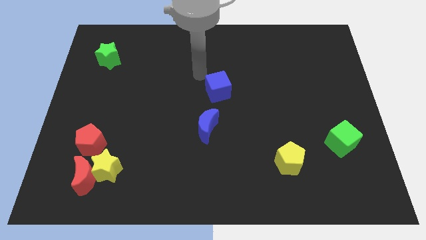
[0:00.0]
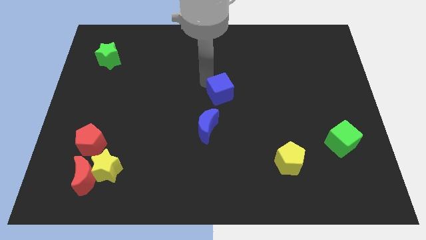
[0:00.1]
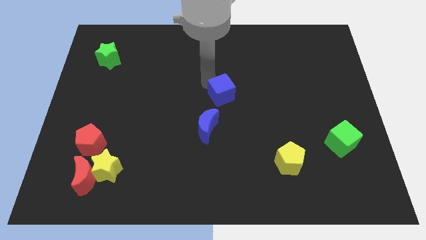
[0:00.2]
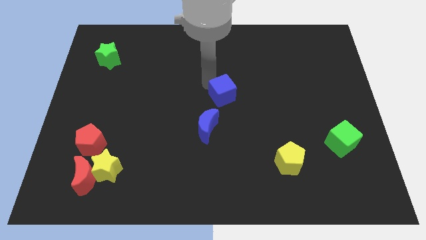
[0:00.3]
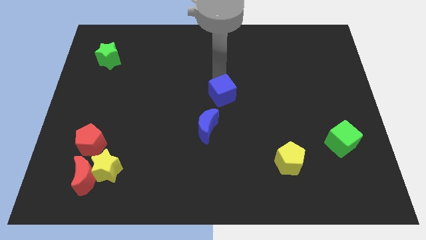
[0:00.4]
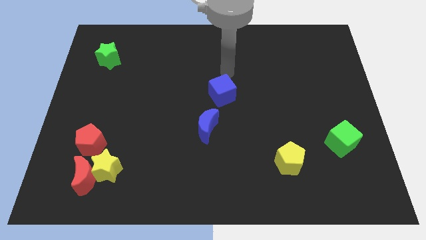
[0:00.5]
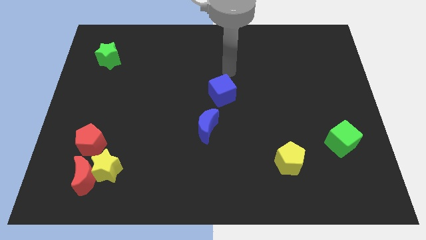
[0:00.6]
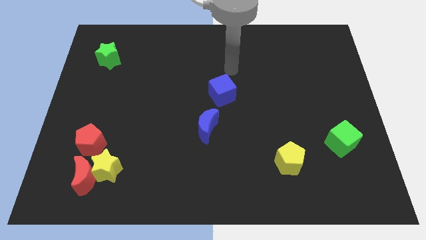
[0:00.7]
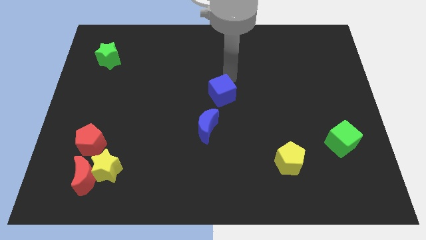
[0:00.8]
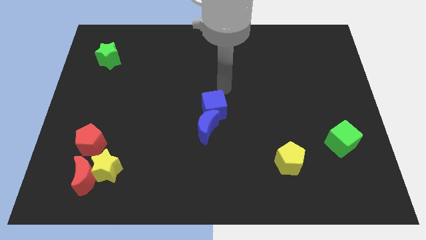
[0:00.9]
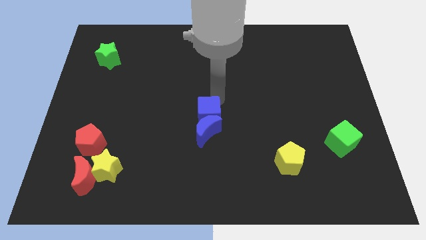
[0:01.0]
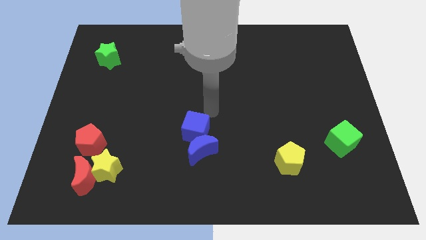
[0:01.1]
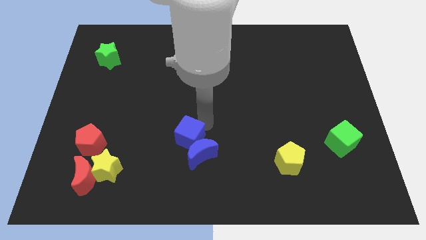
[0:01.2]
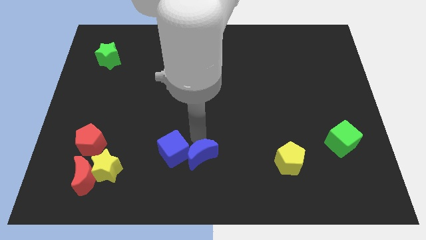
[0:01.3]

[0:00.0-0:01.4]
push the blue cube into the blue moon

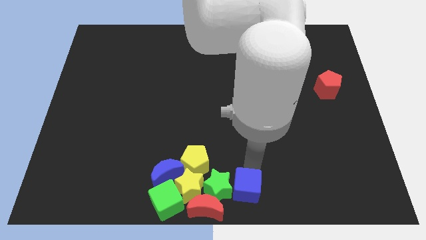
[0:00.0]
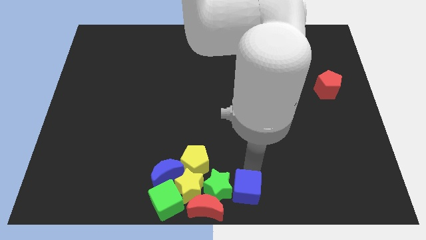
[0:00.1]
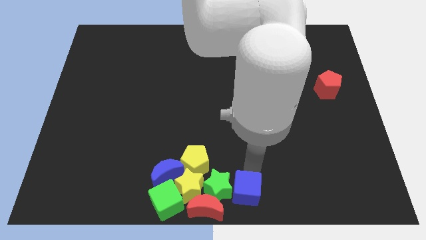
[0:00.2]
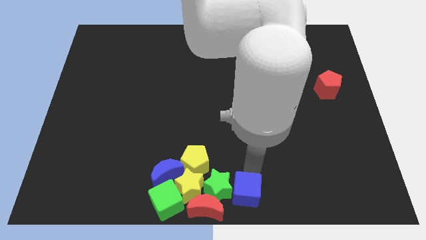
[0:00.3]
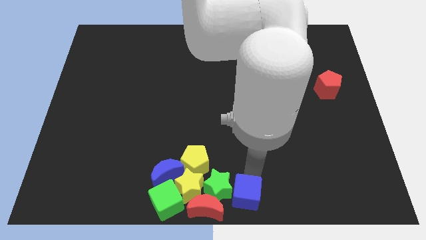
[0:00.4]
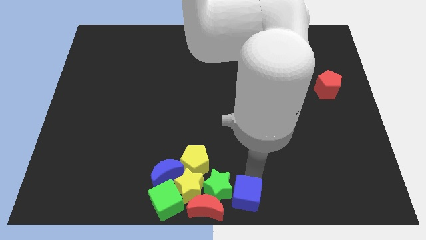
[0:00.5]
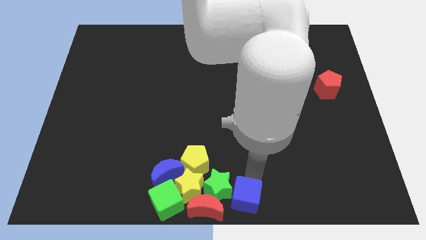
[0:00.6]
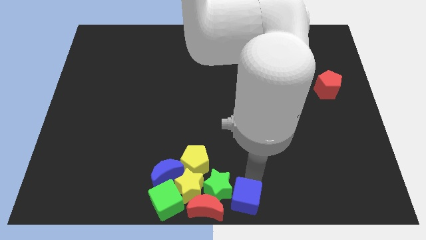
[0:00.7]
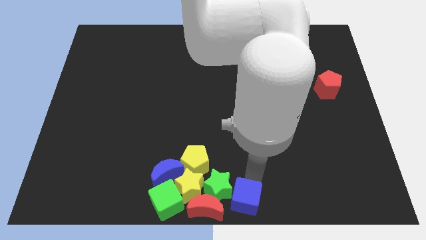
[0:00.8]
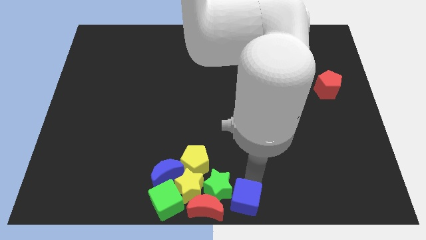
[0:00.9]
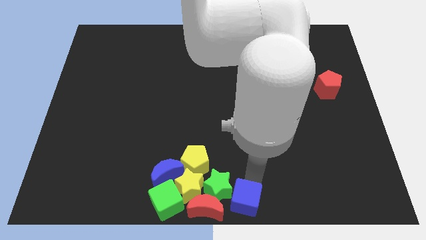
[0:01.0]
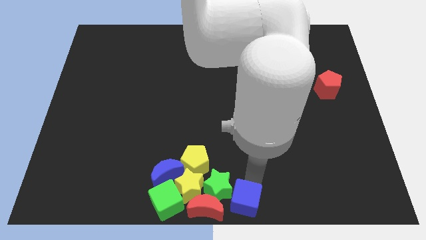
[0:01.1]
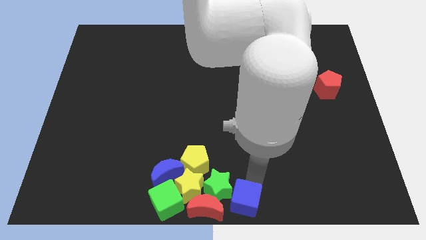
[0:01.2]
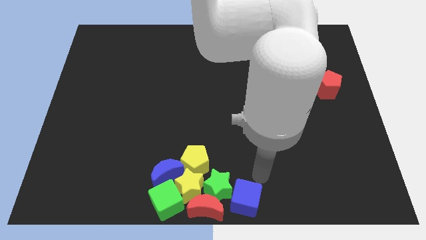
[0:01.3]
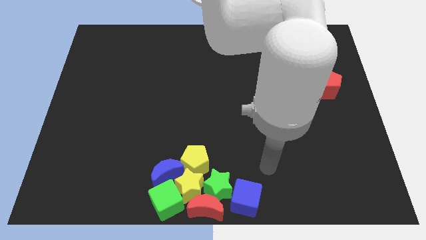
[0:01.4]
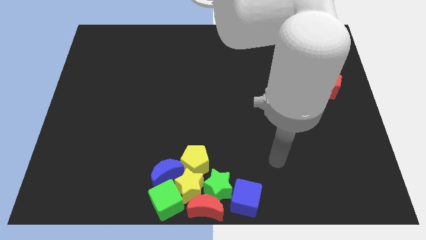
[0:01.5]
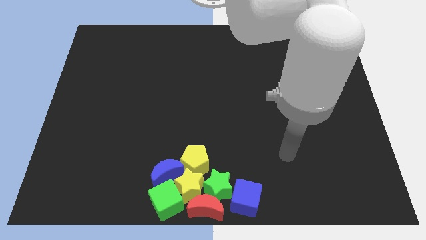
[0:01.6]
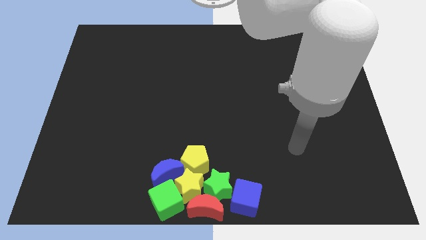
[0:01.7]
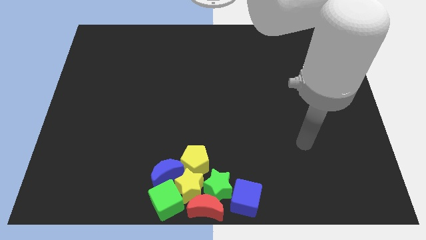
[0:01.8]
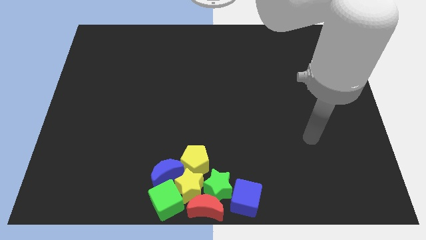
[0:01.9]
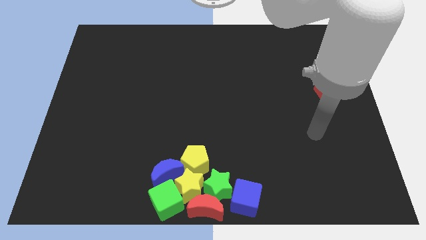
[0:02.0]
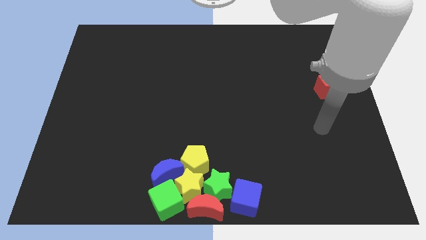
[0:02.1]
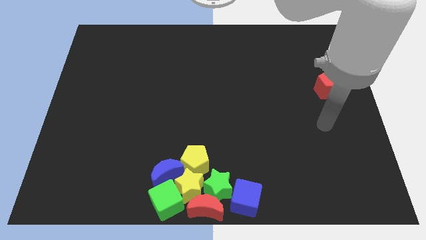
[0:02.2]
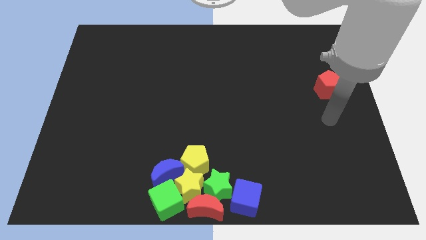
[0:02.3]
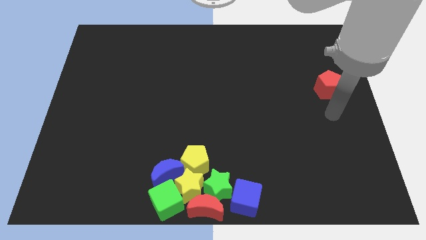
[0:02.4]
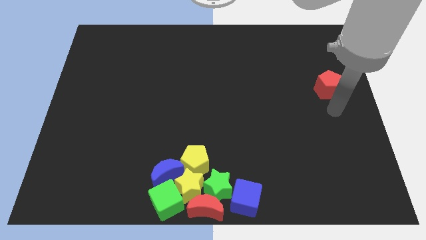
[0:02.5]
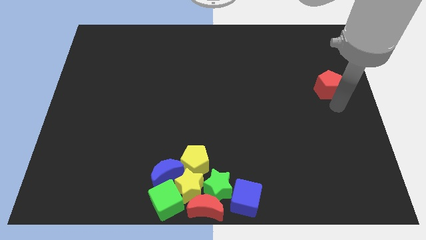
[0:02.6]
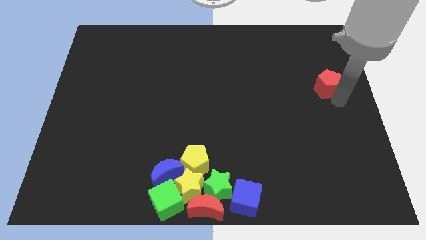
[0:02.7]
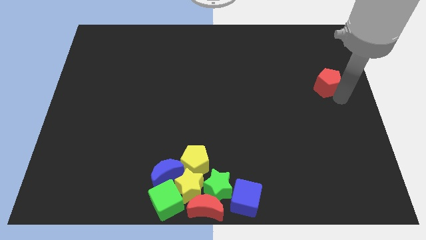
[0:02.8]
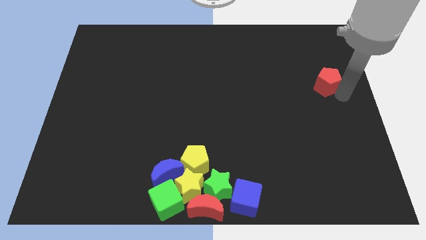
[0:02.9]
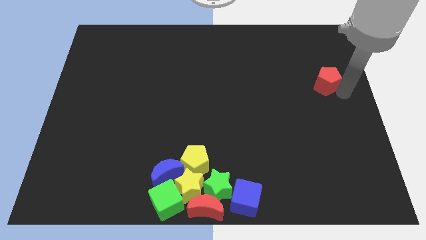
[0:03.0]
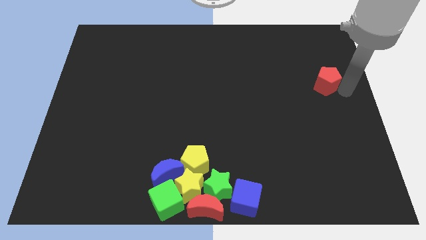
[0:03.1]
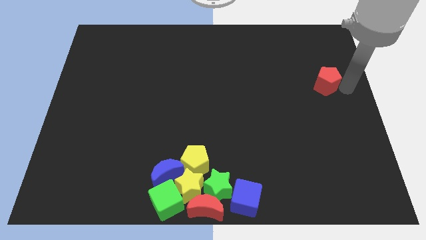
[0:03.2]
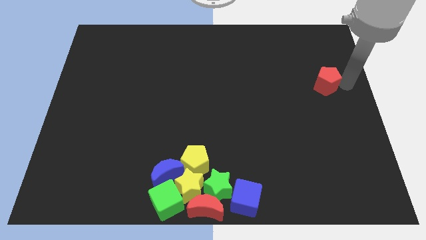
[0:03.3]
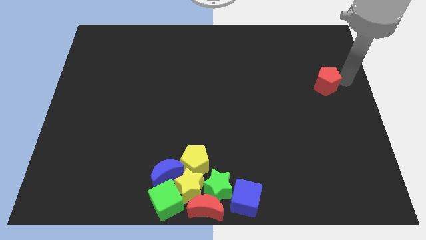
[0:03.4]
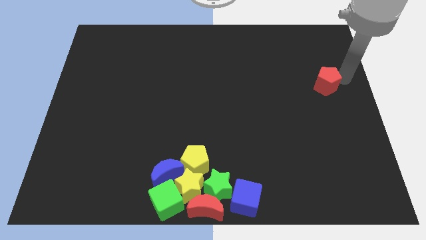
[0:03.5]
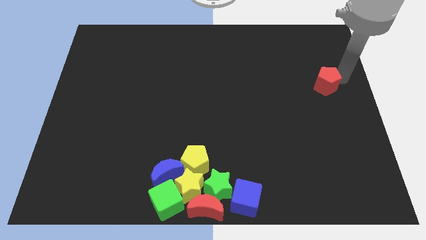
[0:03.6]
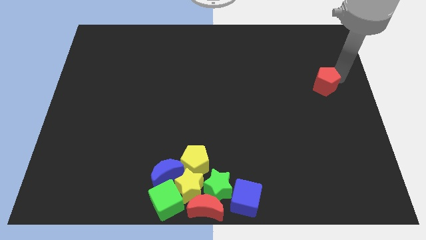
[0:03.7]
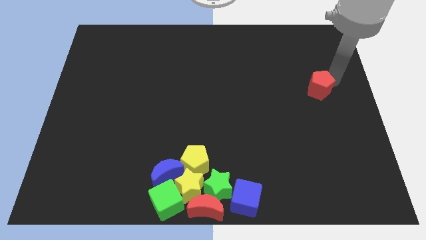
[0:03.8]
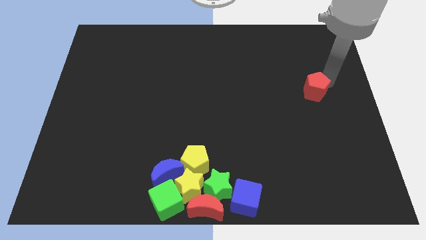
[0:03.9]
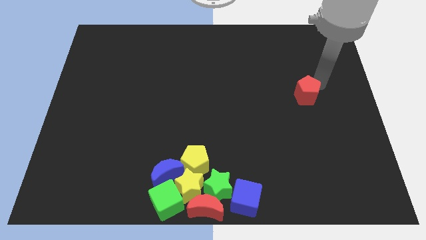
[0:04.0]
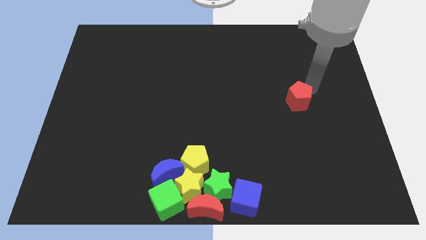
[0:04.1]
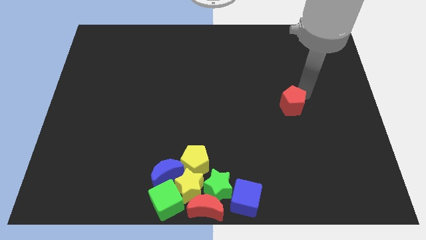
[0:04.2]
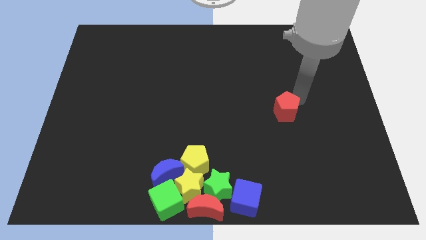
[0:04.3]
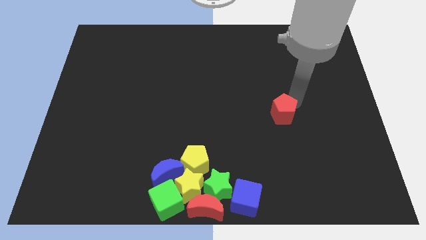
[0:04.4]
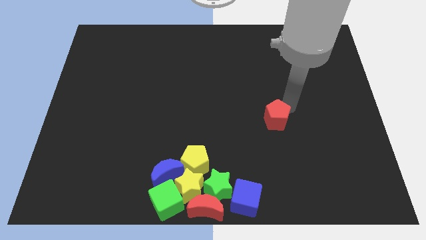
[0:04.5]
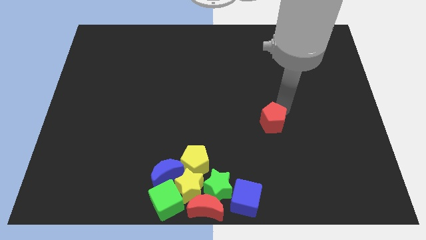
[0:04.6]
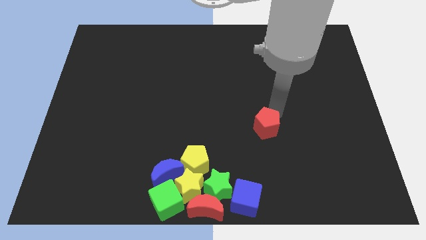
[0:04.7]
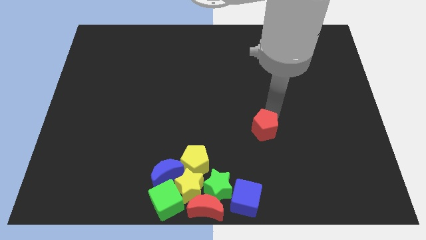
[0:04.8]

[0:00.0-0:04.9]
push the red pentagon towards the yellow pentagon

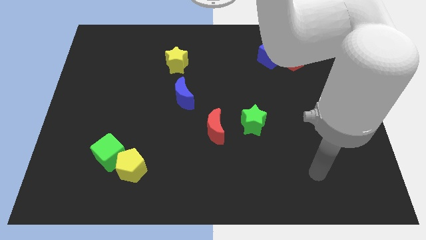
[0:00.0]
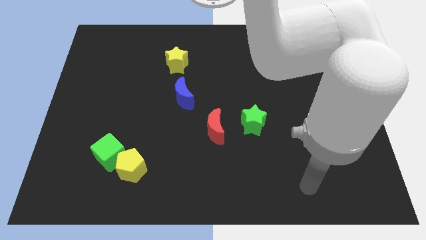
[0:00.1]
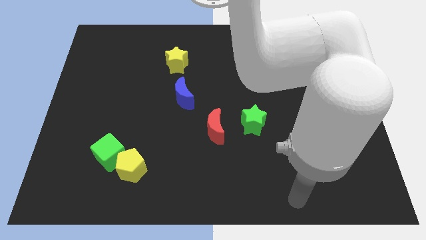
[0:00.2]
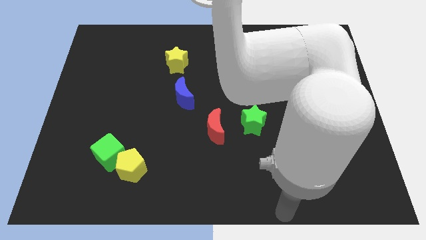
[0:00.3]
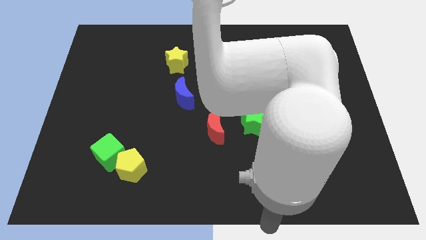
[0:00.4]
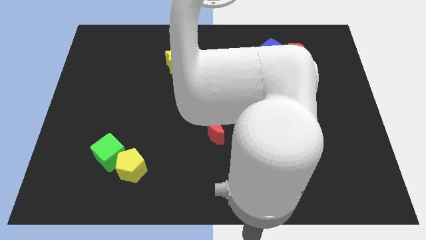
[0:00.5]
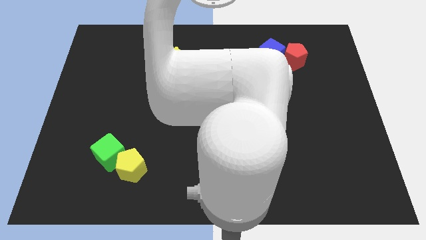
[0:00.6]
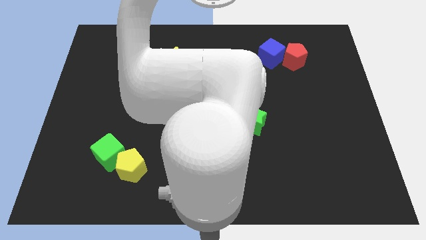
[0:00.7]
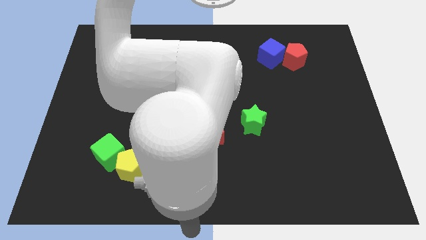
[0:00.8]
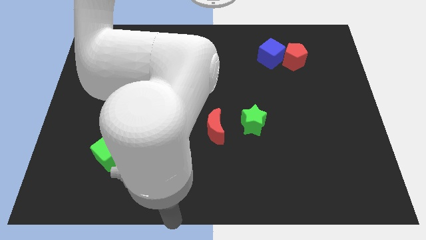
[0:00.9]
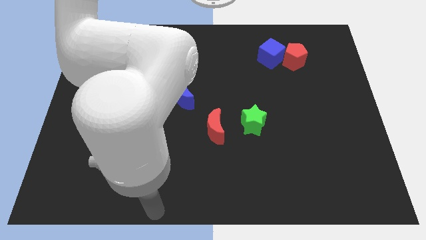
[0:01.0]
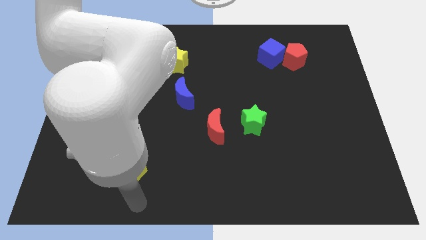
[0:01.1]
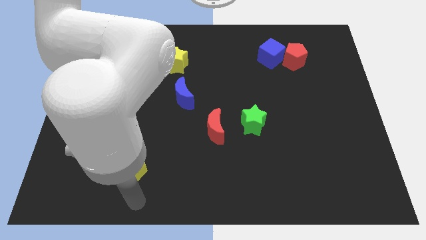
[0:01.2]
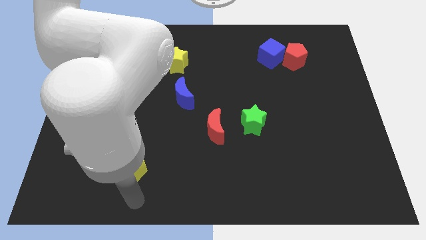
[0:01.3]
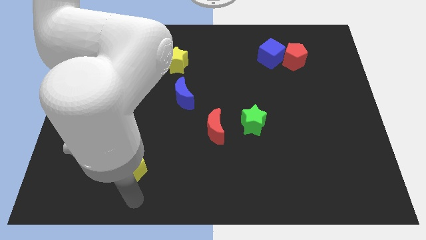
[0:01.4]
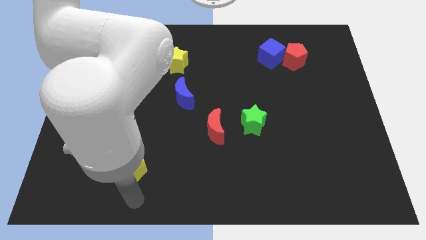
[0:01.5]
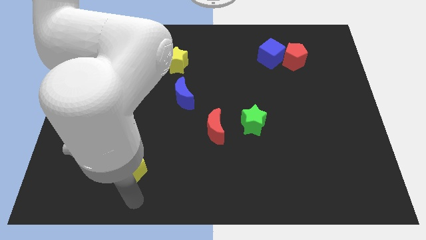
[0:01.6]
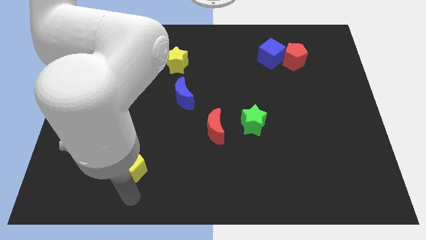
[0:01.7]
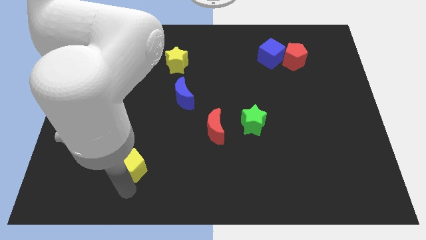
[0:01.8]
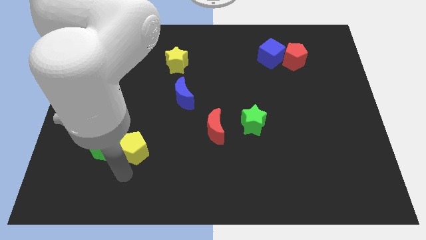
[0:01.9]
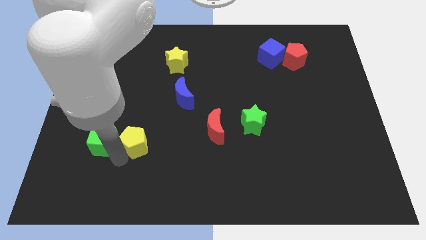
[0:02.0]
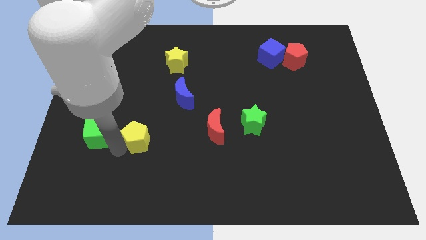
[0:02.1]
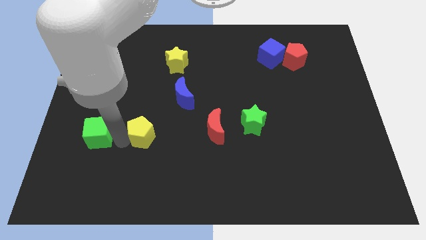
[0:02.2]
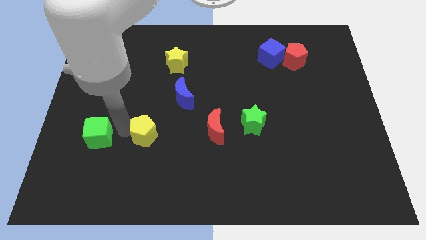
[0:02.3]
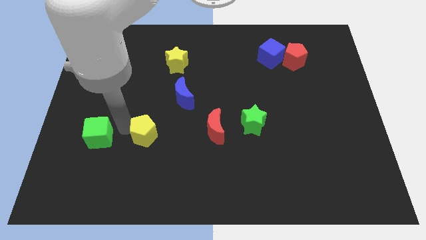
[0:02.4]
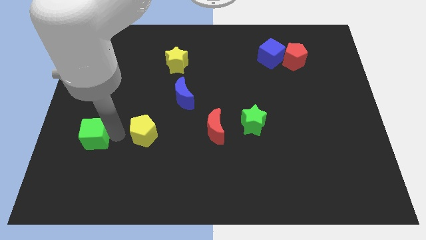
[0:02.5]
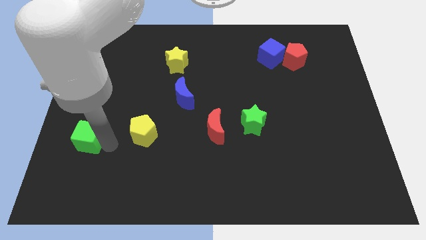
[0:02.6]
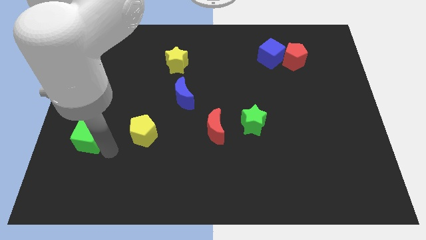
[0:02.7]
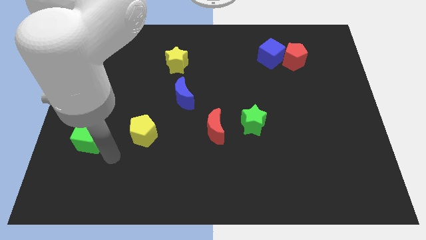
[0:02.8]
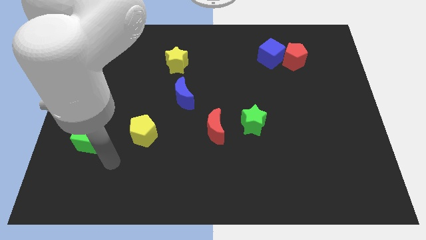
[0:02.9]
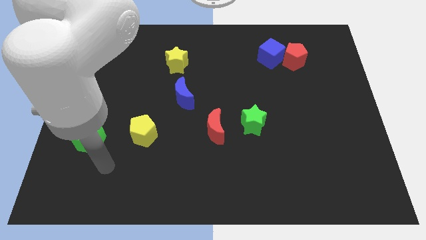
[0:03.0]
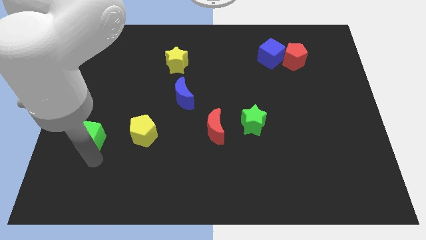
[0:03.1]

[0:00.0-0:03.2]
separate green cube and yellow pentagon
